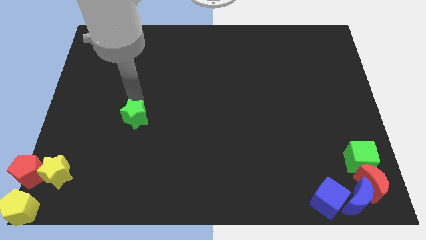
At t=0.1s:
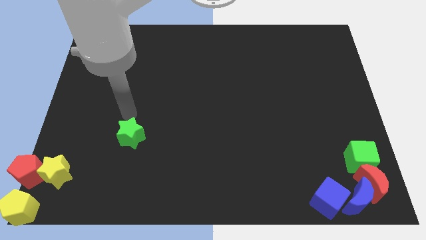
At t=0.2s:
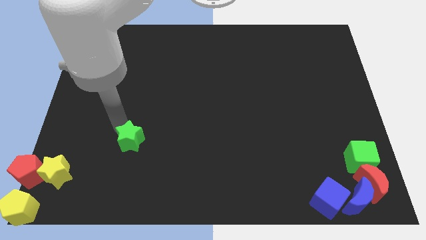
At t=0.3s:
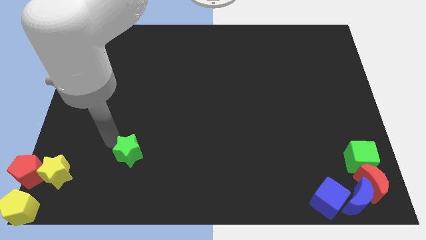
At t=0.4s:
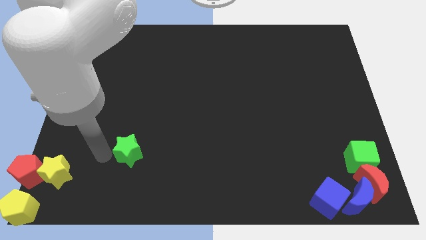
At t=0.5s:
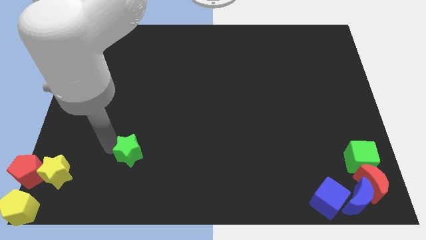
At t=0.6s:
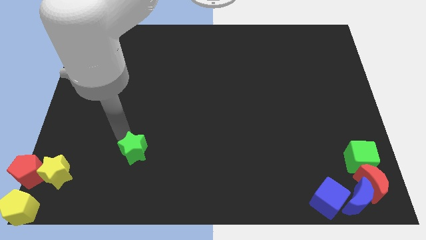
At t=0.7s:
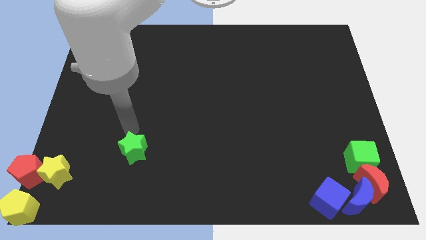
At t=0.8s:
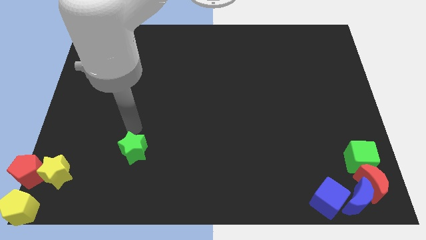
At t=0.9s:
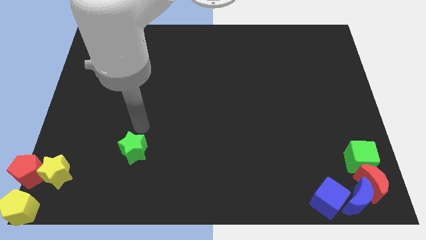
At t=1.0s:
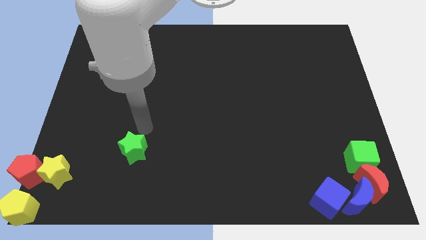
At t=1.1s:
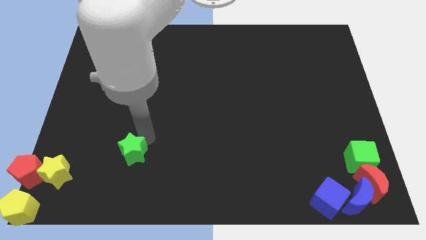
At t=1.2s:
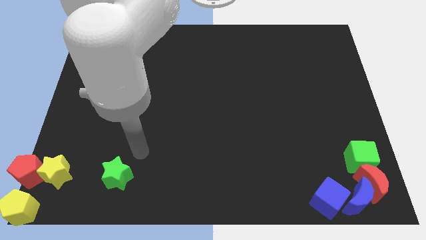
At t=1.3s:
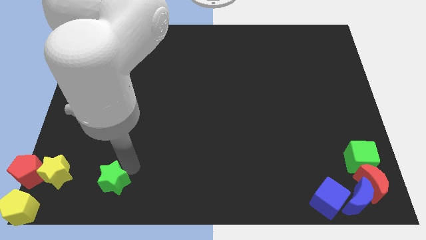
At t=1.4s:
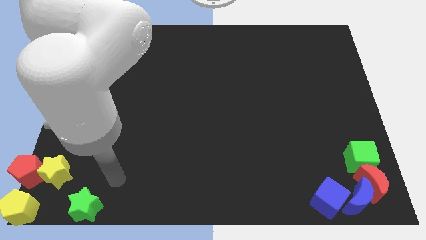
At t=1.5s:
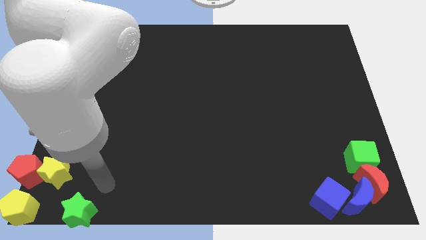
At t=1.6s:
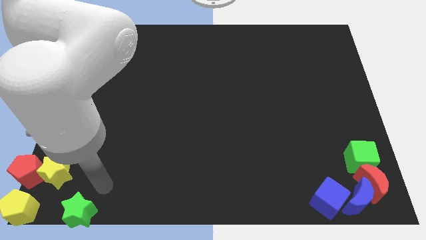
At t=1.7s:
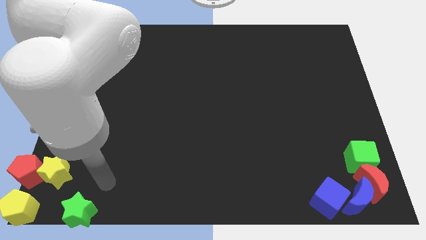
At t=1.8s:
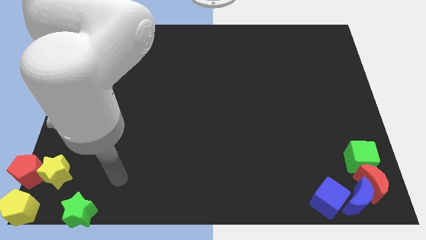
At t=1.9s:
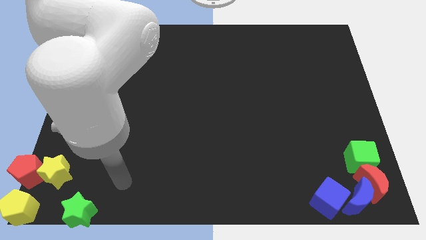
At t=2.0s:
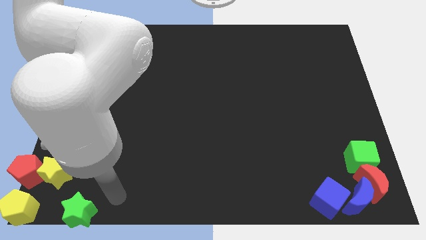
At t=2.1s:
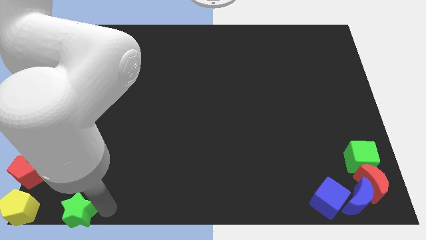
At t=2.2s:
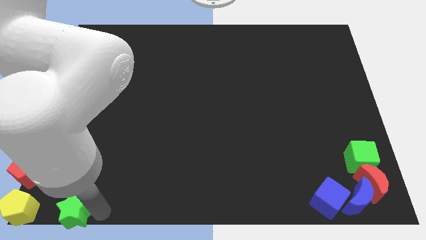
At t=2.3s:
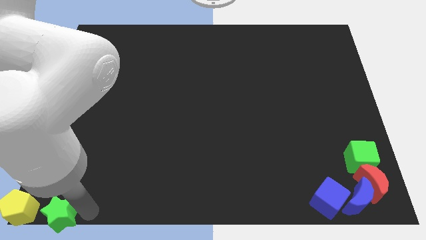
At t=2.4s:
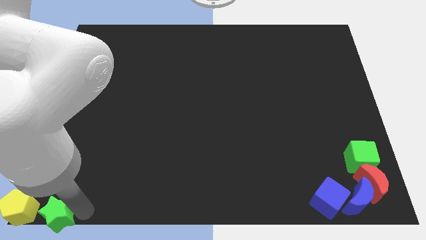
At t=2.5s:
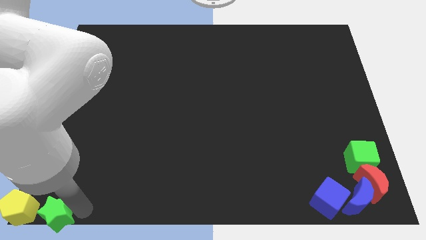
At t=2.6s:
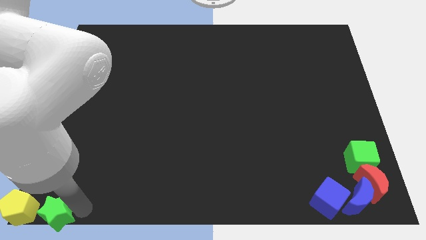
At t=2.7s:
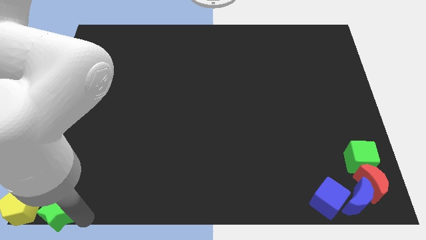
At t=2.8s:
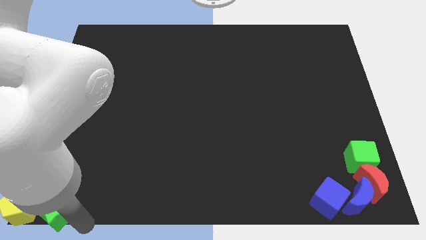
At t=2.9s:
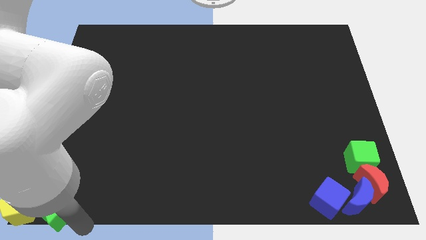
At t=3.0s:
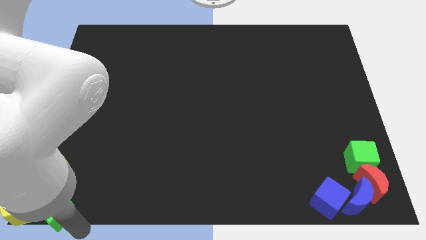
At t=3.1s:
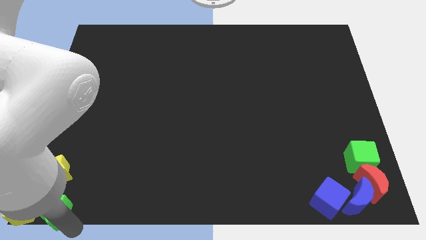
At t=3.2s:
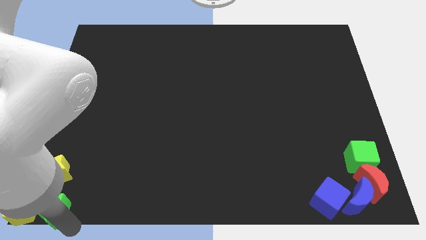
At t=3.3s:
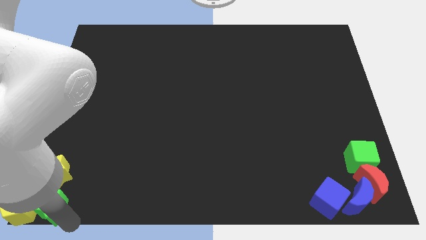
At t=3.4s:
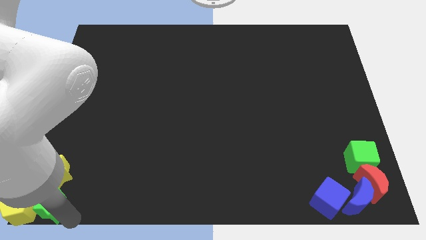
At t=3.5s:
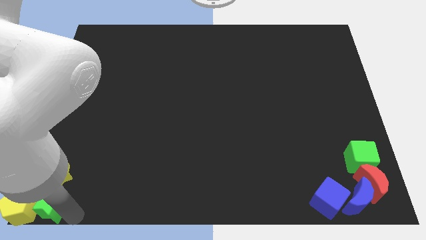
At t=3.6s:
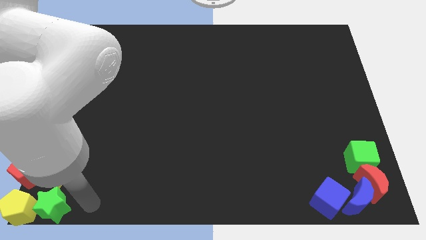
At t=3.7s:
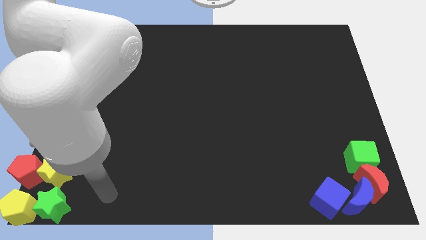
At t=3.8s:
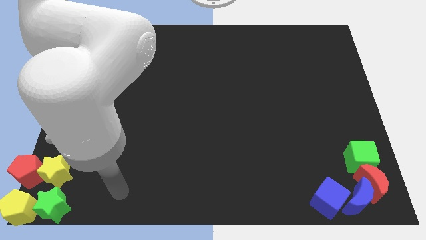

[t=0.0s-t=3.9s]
move the green star right to the yellow pentagon

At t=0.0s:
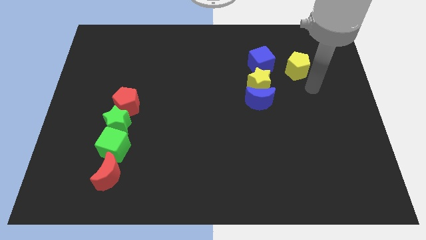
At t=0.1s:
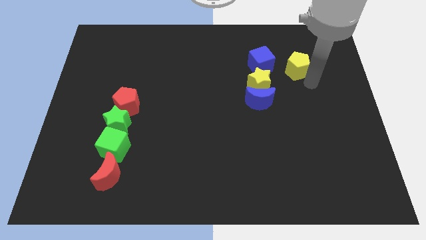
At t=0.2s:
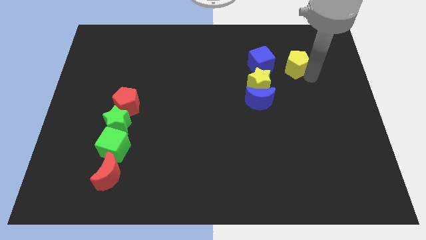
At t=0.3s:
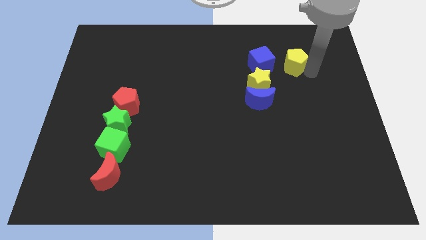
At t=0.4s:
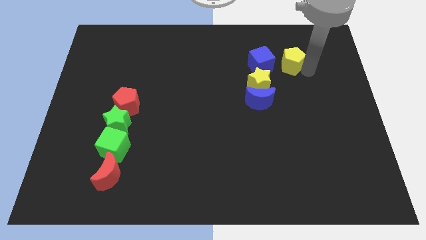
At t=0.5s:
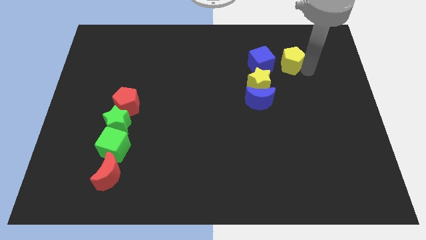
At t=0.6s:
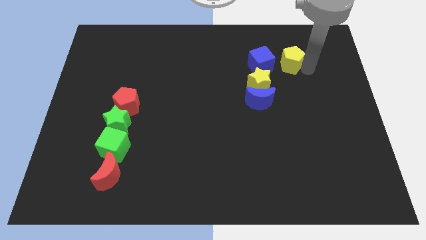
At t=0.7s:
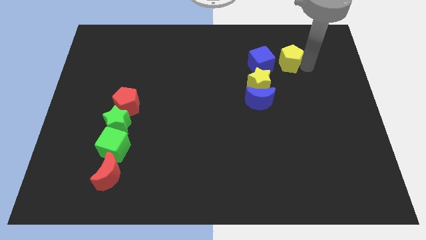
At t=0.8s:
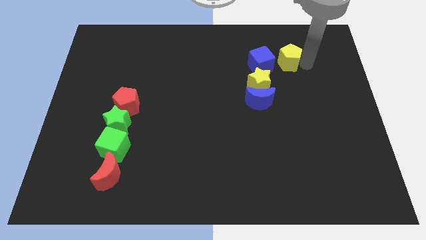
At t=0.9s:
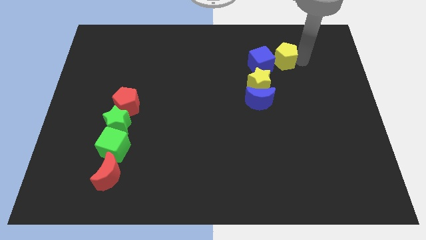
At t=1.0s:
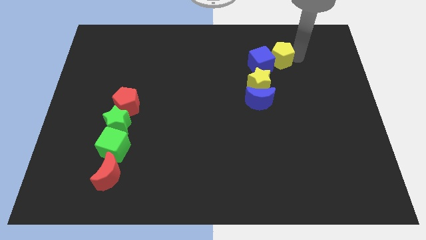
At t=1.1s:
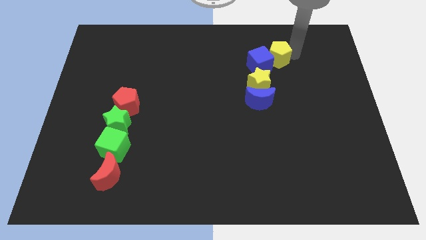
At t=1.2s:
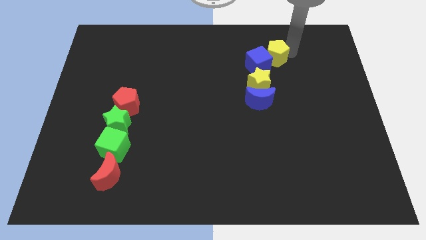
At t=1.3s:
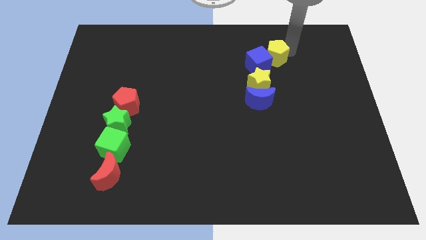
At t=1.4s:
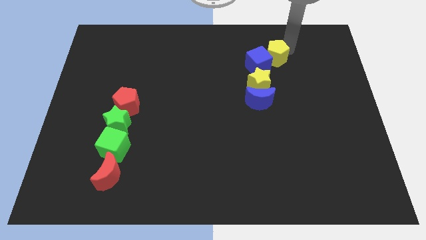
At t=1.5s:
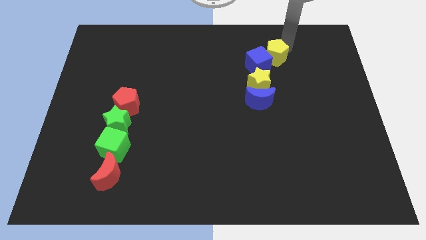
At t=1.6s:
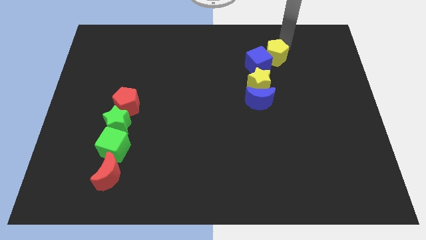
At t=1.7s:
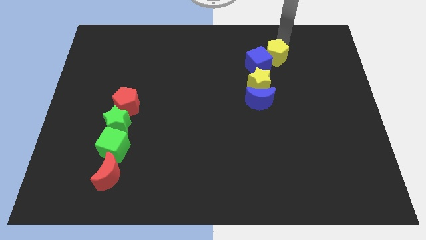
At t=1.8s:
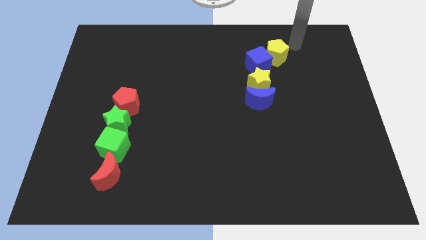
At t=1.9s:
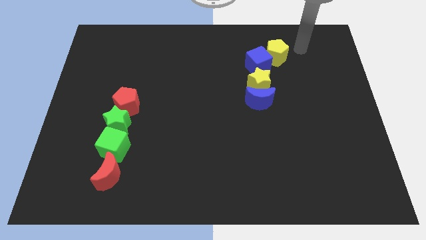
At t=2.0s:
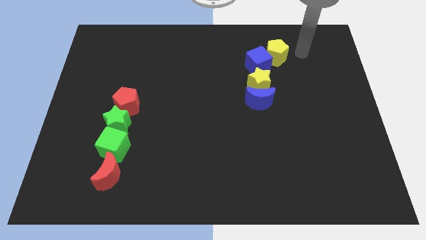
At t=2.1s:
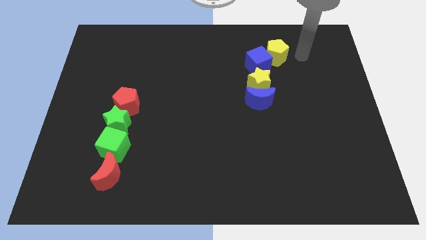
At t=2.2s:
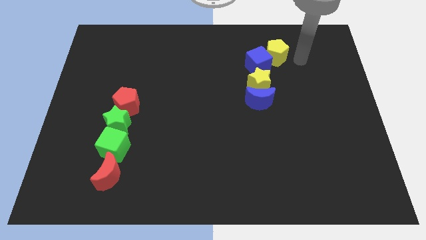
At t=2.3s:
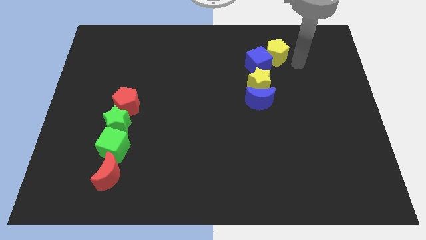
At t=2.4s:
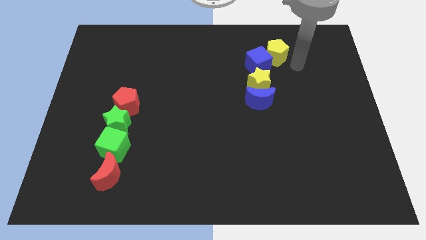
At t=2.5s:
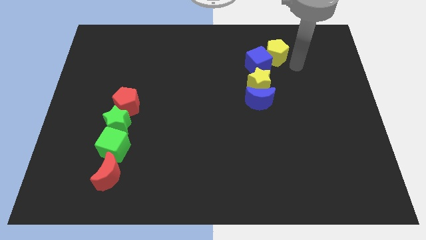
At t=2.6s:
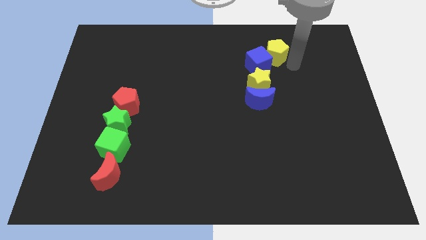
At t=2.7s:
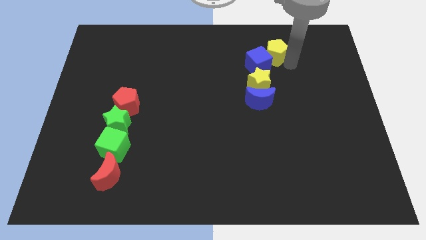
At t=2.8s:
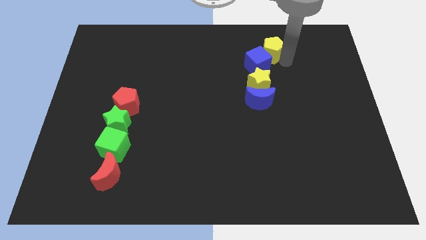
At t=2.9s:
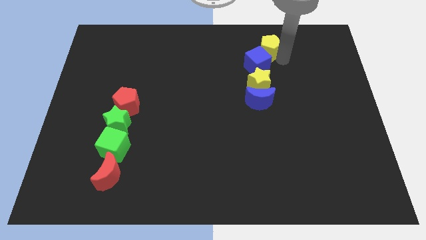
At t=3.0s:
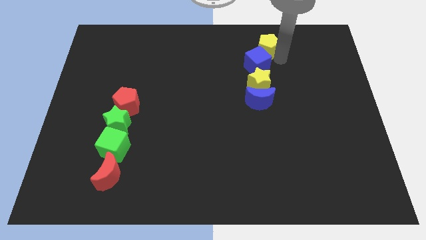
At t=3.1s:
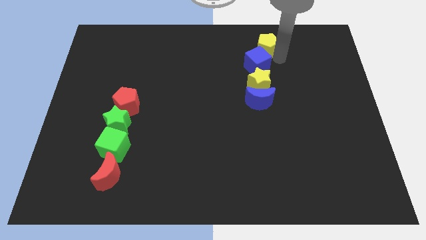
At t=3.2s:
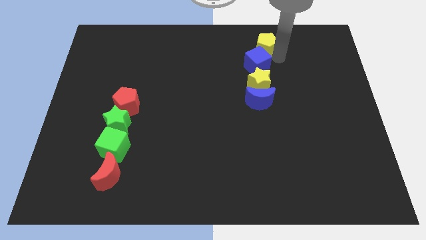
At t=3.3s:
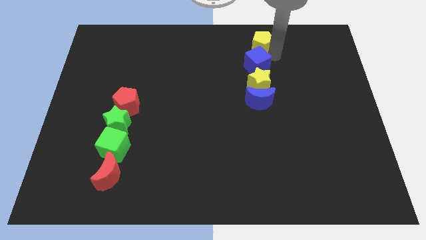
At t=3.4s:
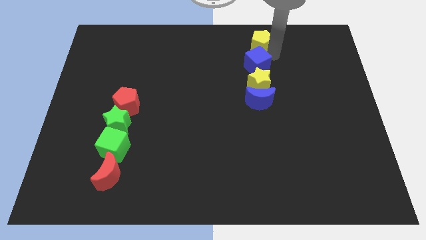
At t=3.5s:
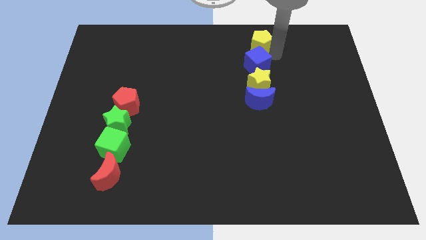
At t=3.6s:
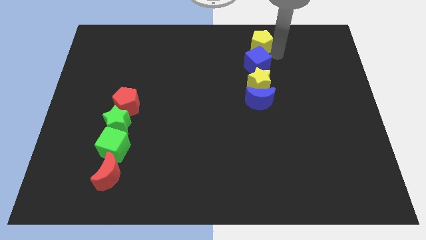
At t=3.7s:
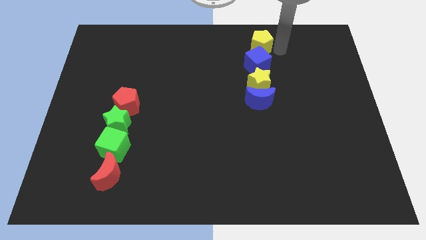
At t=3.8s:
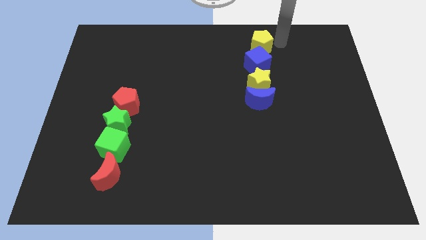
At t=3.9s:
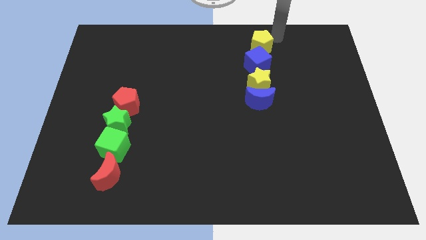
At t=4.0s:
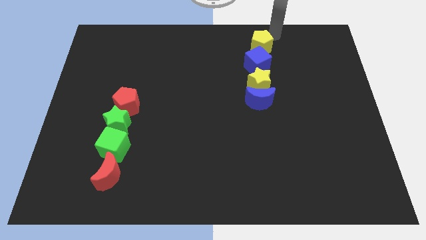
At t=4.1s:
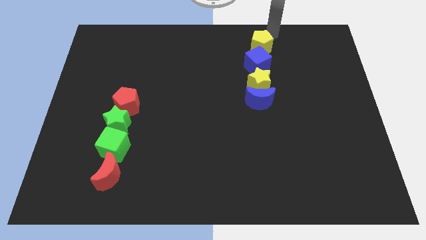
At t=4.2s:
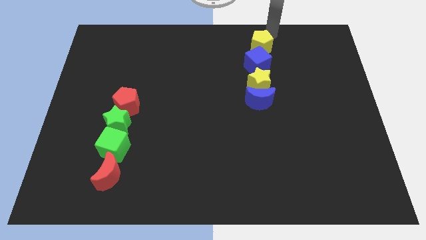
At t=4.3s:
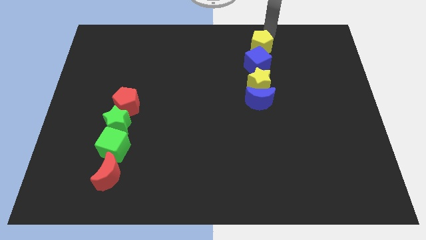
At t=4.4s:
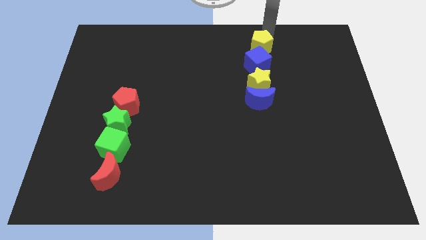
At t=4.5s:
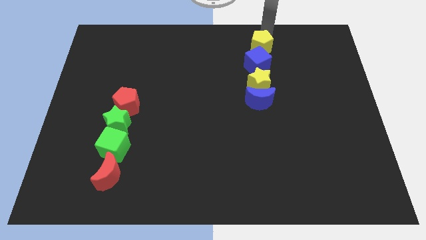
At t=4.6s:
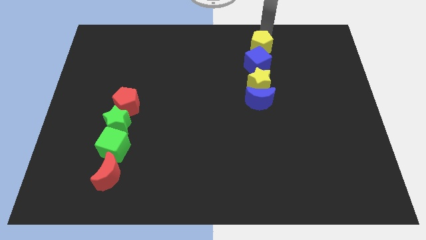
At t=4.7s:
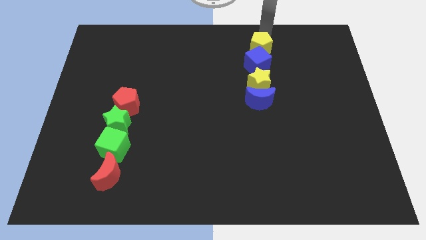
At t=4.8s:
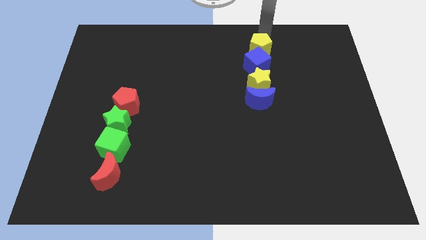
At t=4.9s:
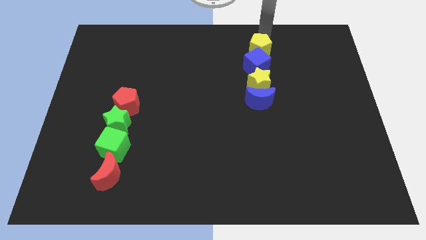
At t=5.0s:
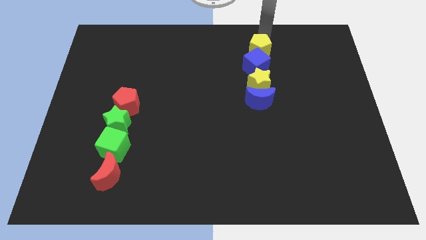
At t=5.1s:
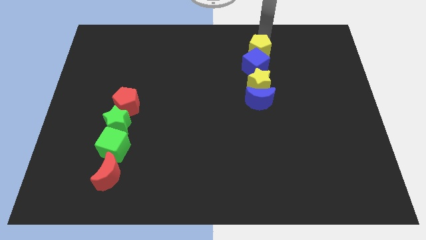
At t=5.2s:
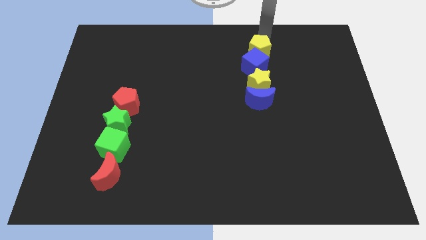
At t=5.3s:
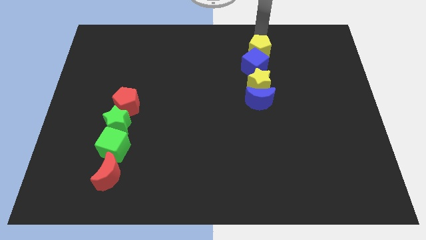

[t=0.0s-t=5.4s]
move the yellow pentagon to the top of the blue cube
